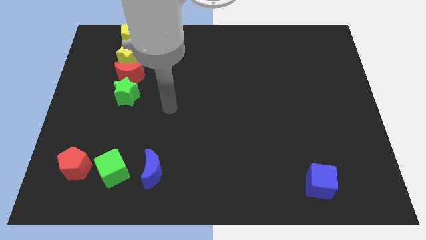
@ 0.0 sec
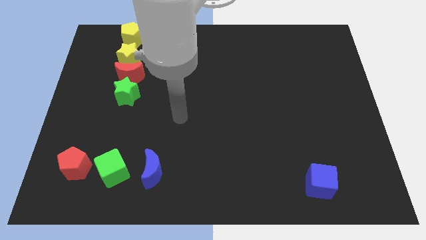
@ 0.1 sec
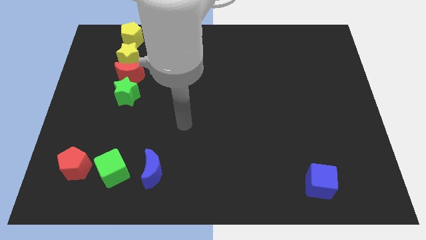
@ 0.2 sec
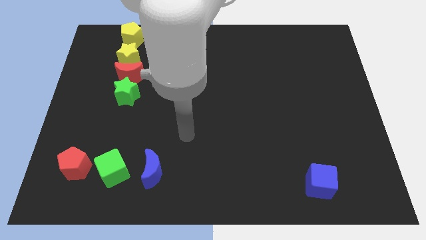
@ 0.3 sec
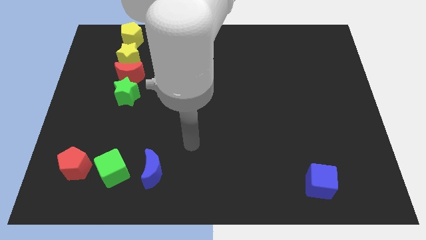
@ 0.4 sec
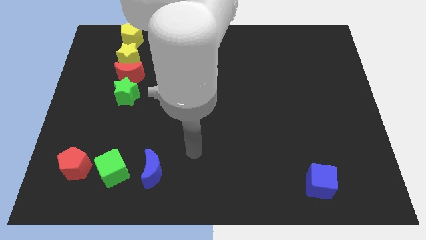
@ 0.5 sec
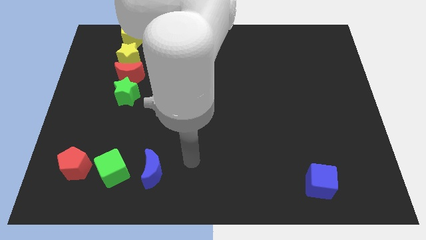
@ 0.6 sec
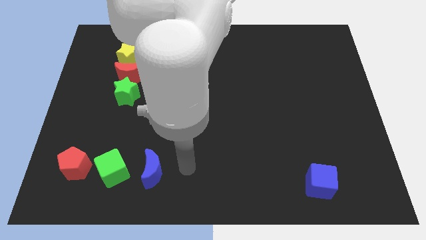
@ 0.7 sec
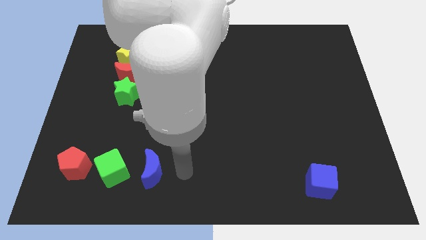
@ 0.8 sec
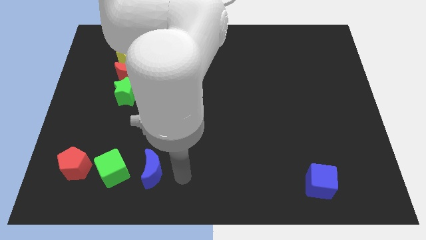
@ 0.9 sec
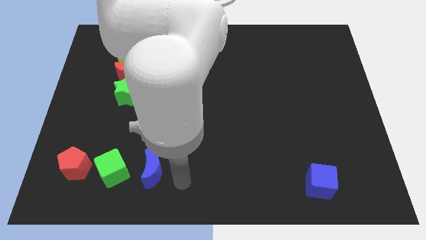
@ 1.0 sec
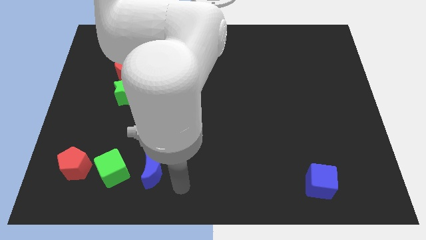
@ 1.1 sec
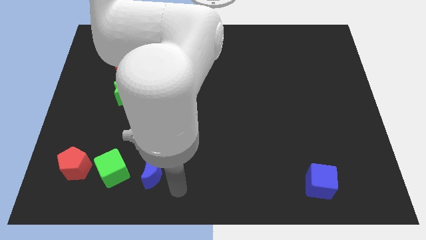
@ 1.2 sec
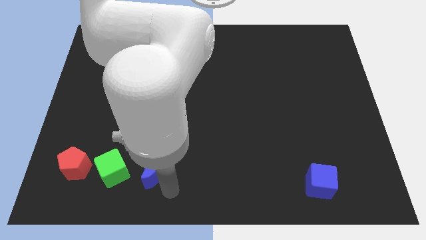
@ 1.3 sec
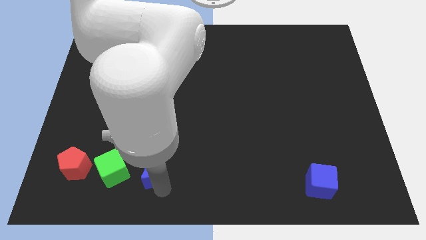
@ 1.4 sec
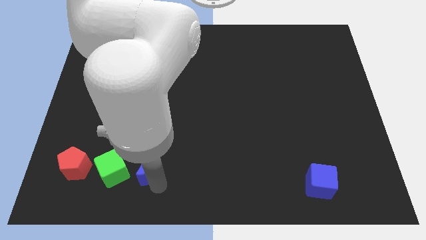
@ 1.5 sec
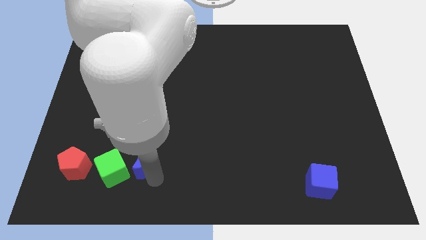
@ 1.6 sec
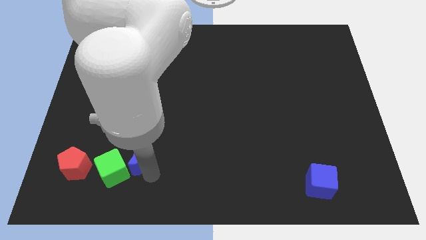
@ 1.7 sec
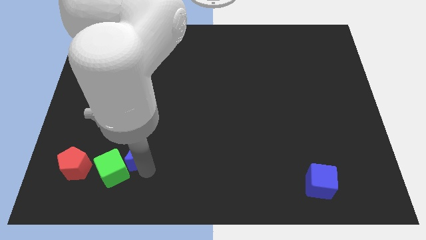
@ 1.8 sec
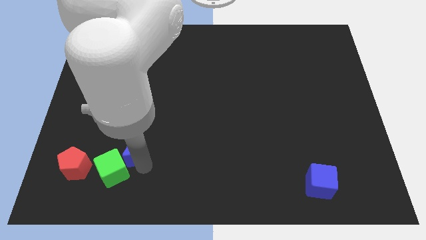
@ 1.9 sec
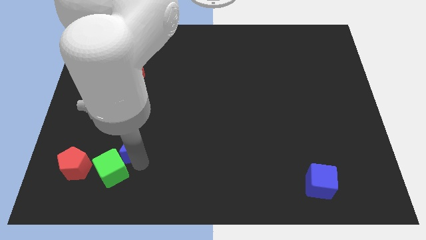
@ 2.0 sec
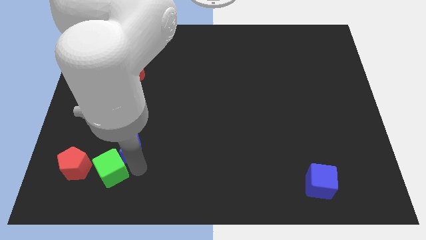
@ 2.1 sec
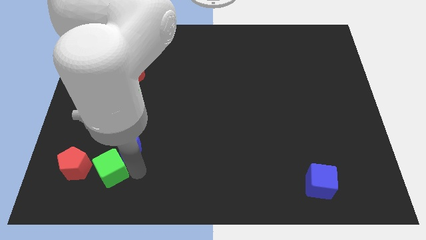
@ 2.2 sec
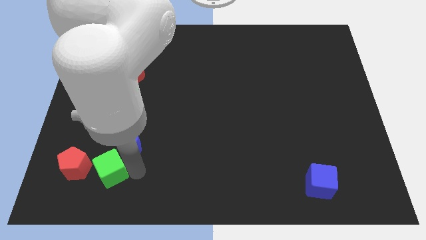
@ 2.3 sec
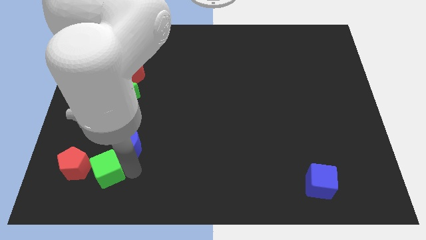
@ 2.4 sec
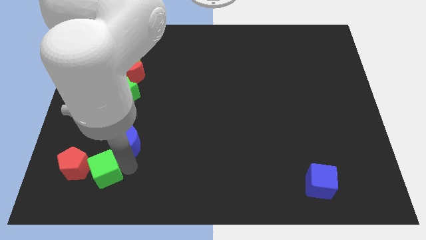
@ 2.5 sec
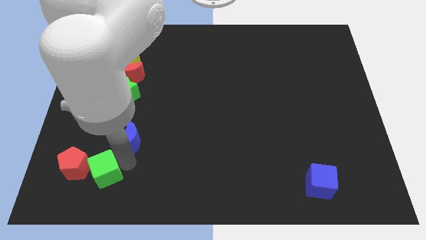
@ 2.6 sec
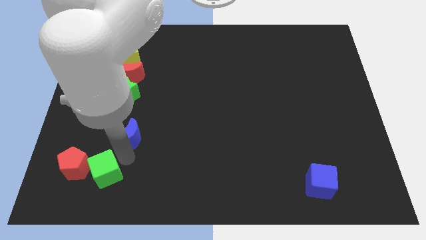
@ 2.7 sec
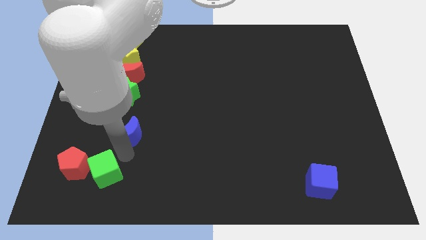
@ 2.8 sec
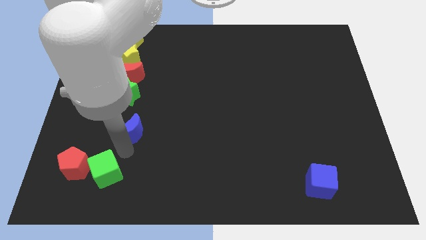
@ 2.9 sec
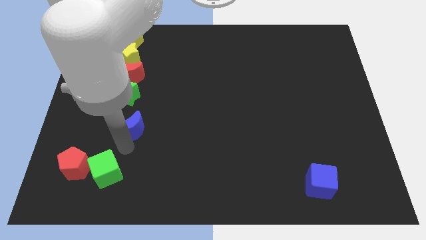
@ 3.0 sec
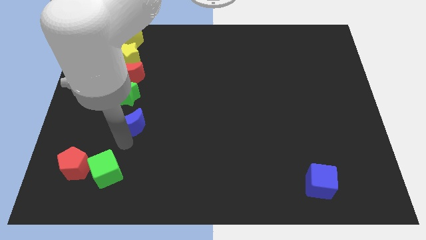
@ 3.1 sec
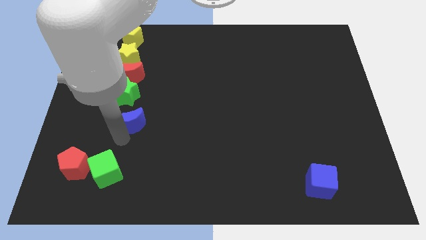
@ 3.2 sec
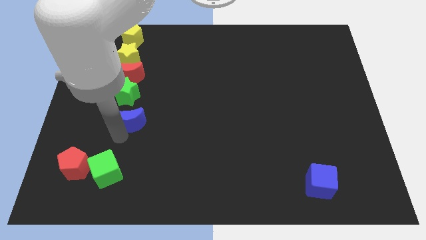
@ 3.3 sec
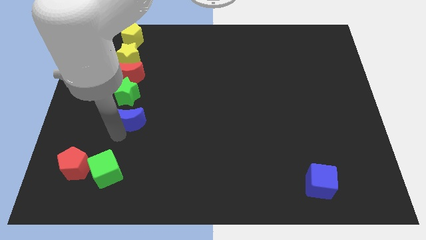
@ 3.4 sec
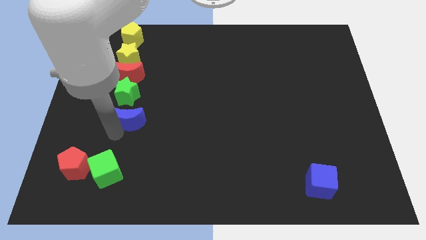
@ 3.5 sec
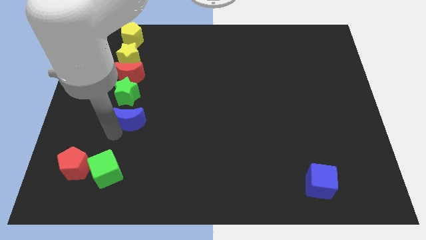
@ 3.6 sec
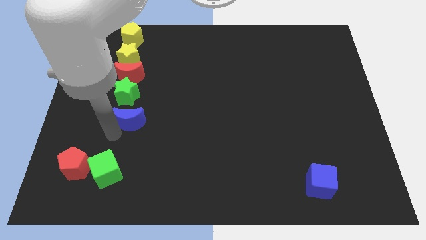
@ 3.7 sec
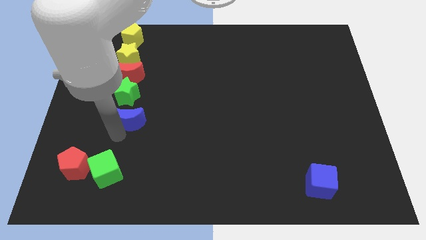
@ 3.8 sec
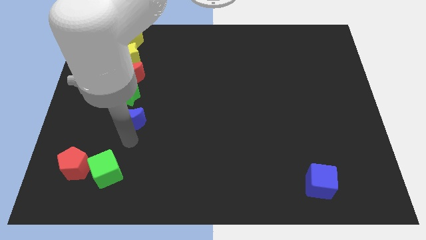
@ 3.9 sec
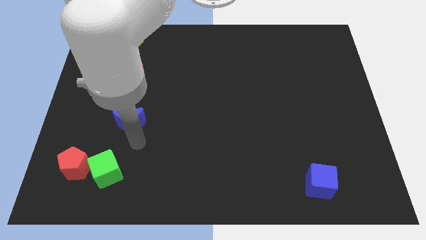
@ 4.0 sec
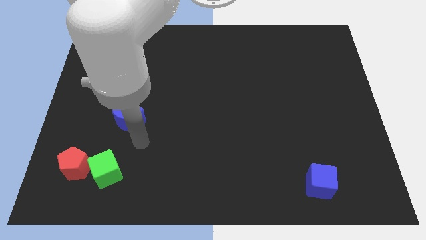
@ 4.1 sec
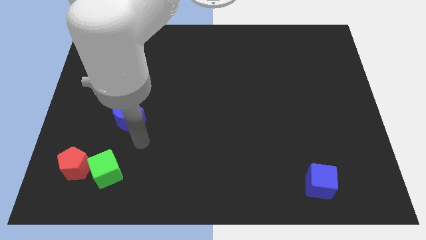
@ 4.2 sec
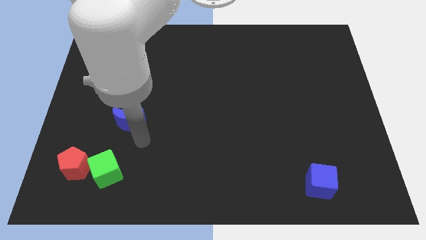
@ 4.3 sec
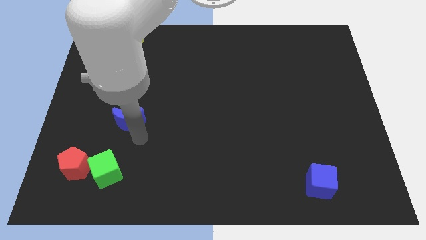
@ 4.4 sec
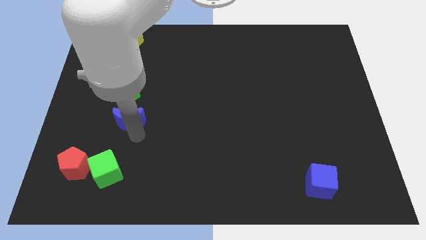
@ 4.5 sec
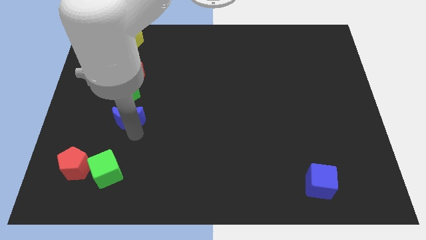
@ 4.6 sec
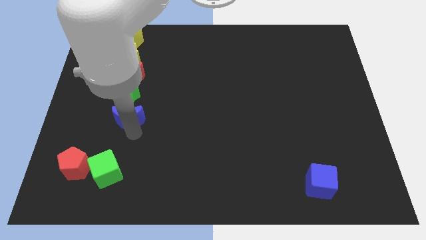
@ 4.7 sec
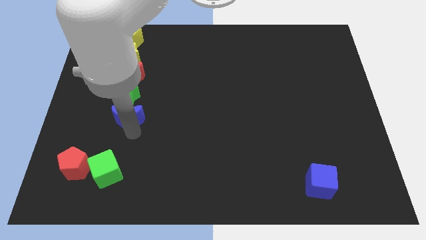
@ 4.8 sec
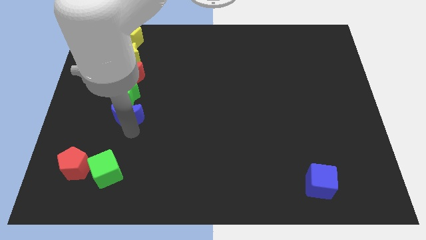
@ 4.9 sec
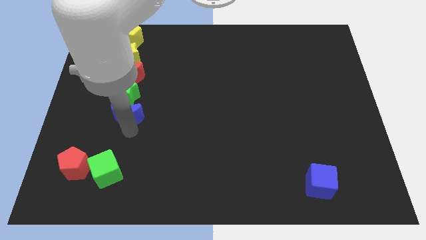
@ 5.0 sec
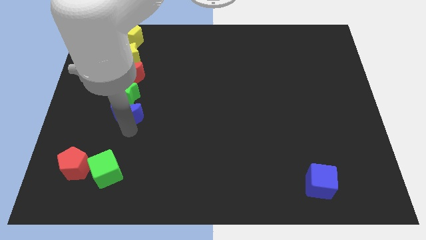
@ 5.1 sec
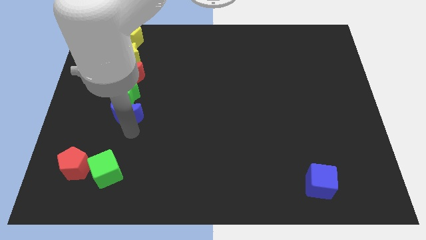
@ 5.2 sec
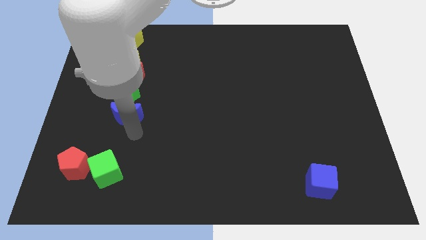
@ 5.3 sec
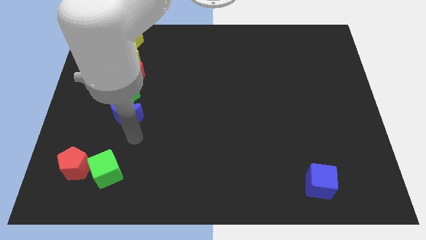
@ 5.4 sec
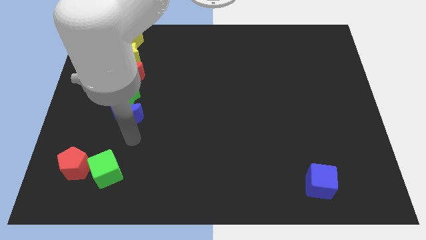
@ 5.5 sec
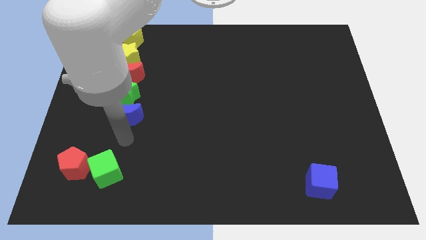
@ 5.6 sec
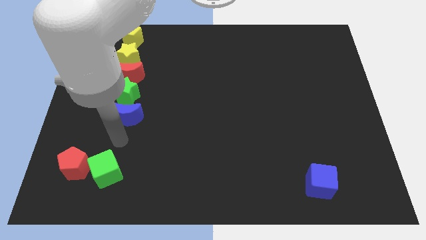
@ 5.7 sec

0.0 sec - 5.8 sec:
move blue moon below green star

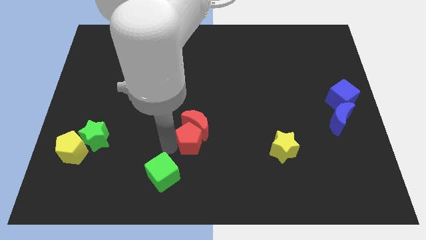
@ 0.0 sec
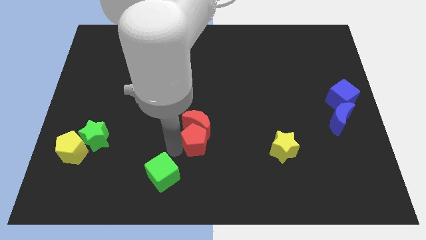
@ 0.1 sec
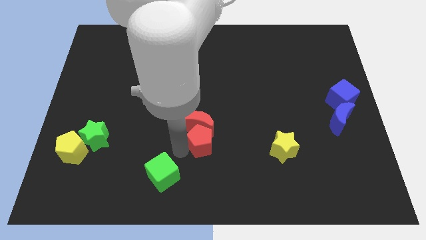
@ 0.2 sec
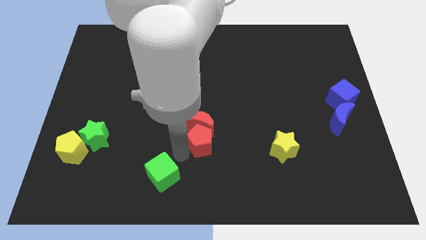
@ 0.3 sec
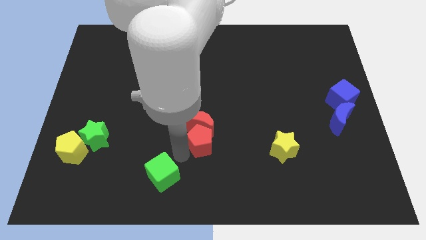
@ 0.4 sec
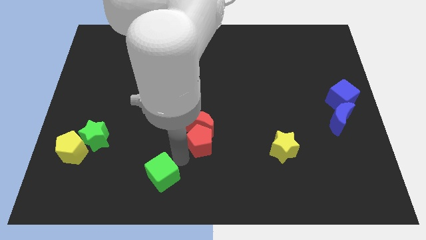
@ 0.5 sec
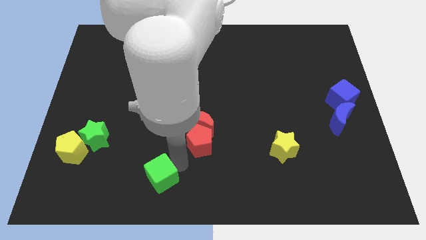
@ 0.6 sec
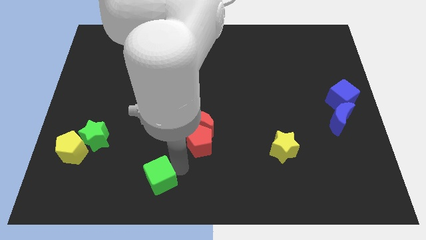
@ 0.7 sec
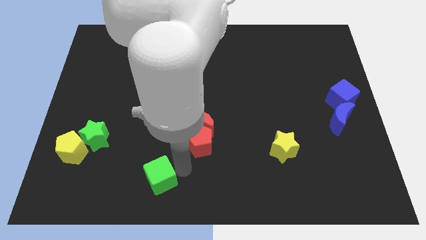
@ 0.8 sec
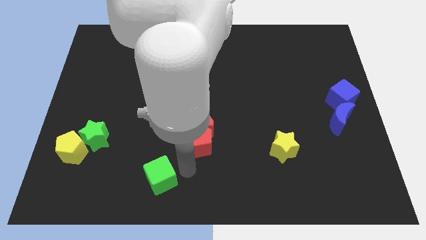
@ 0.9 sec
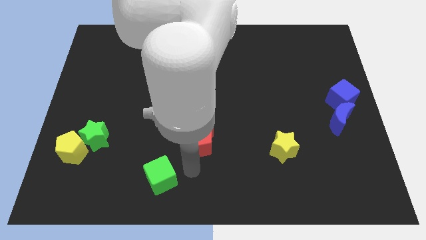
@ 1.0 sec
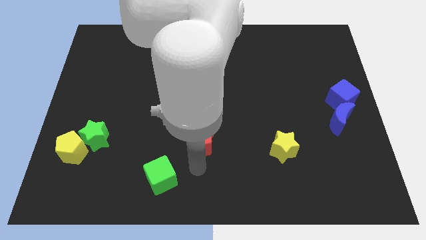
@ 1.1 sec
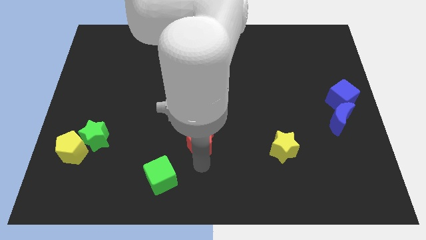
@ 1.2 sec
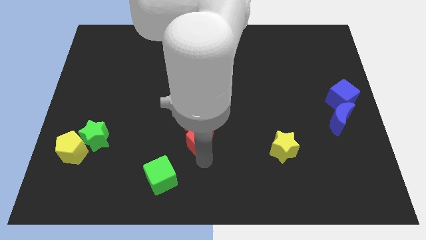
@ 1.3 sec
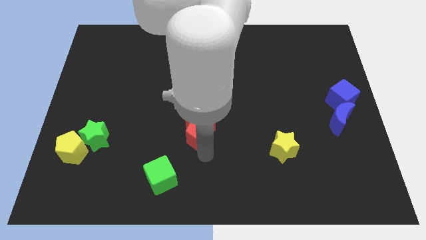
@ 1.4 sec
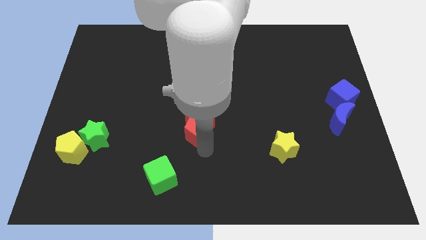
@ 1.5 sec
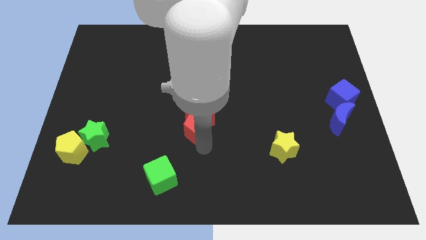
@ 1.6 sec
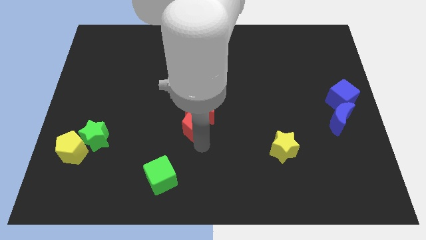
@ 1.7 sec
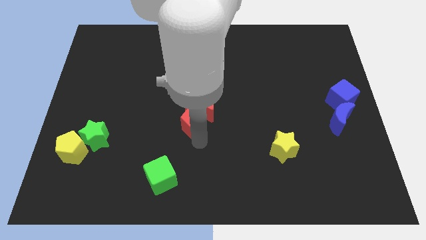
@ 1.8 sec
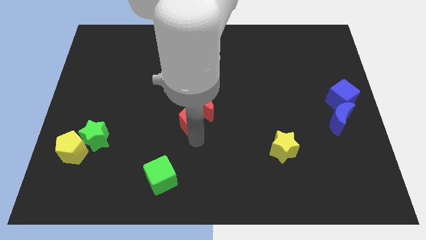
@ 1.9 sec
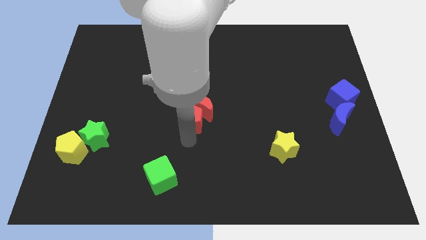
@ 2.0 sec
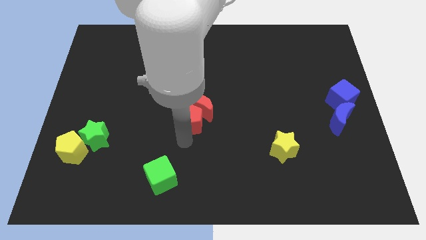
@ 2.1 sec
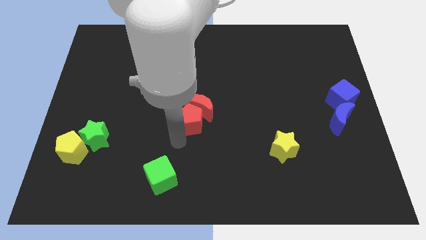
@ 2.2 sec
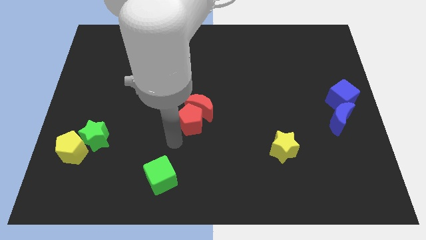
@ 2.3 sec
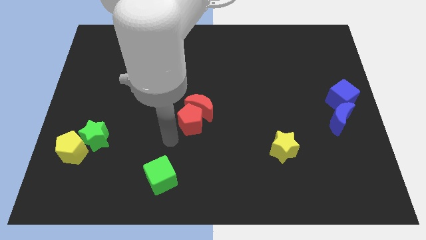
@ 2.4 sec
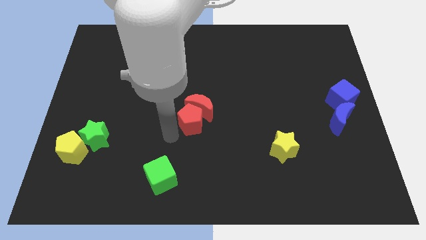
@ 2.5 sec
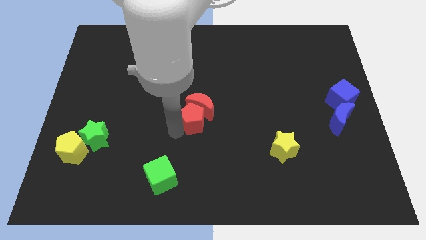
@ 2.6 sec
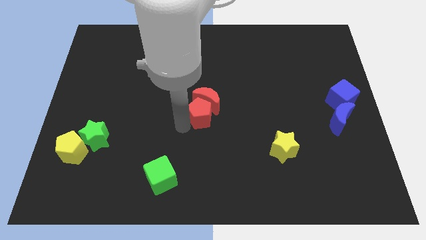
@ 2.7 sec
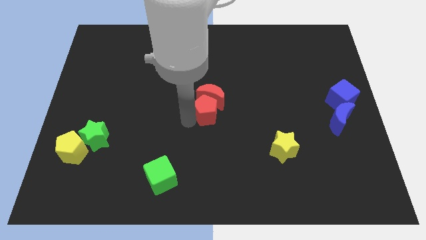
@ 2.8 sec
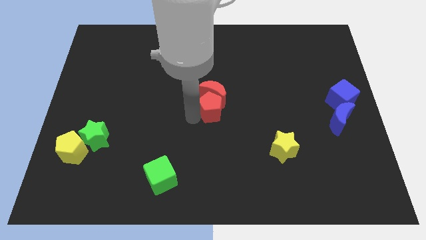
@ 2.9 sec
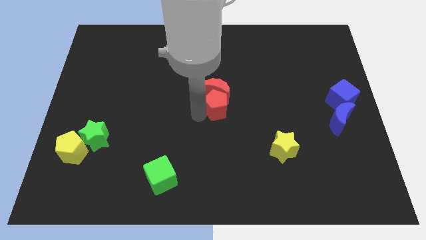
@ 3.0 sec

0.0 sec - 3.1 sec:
move red blocks to the center
